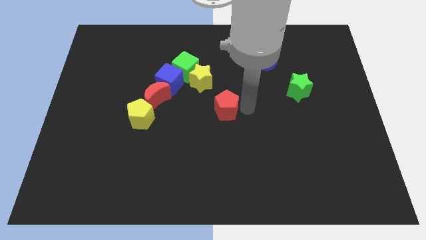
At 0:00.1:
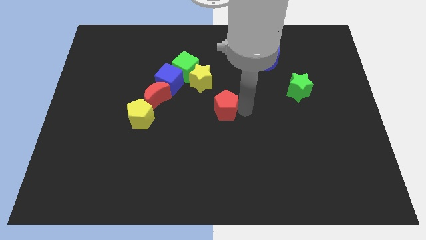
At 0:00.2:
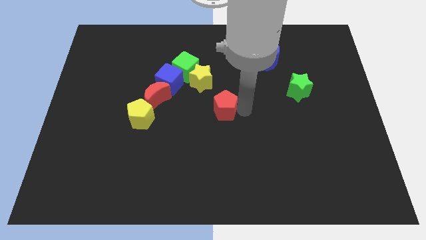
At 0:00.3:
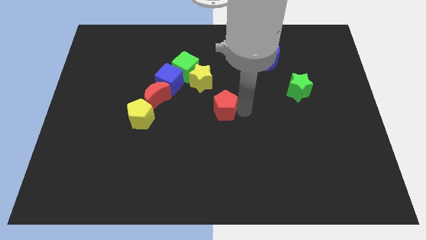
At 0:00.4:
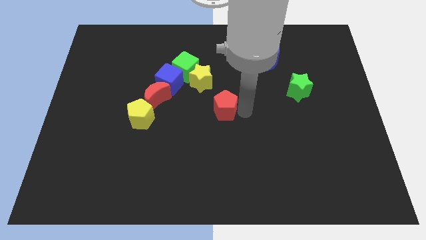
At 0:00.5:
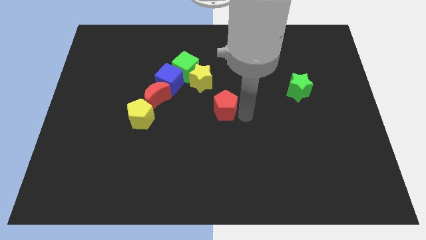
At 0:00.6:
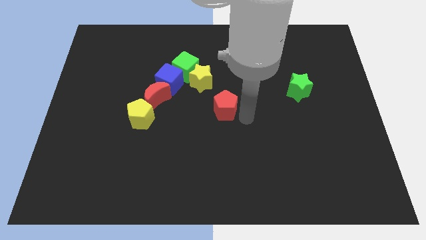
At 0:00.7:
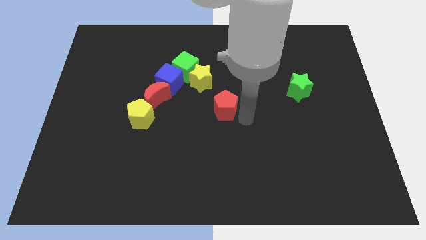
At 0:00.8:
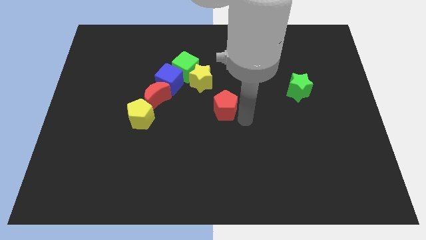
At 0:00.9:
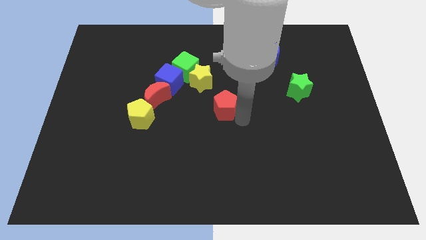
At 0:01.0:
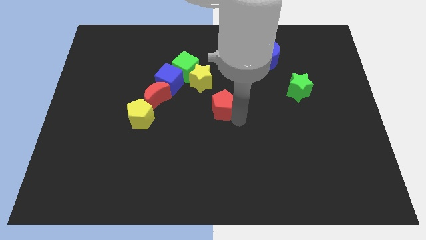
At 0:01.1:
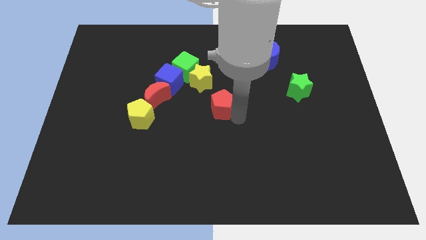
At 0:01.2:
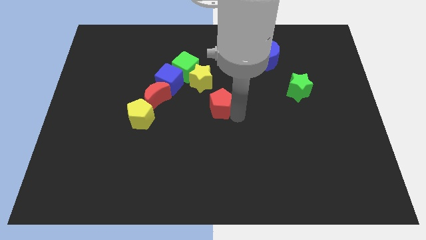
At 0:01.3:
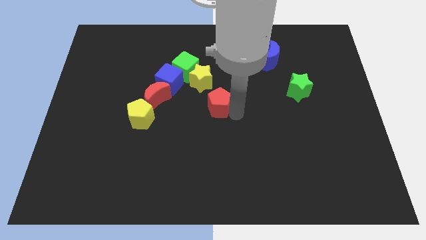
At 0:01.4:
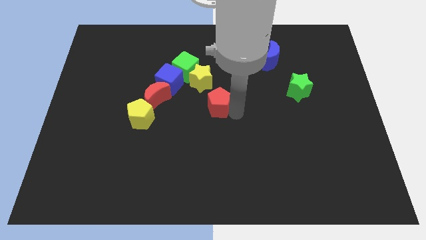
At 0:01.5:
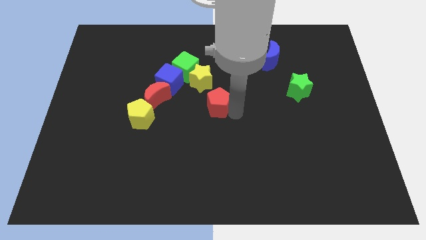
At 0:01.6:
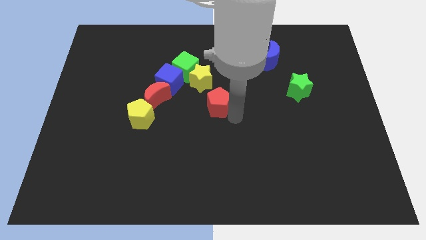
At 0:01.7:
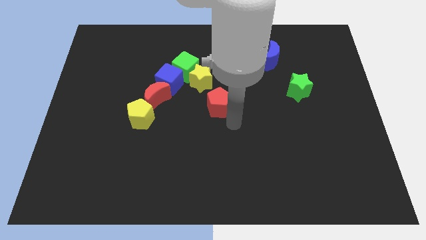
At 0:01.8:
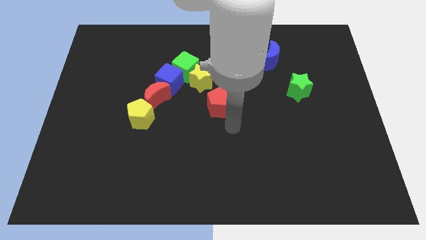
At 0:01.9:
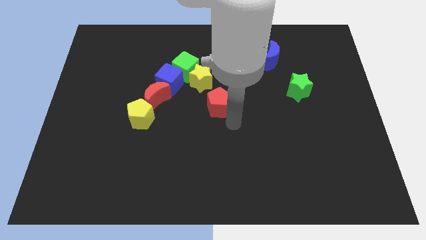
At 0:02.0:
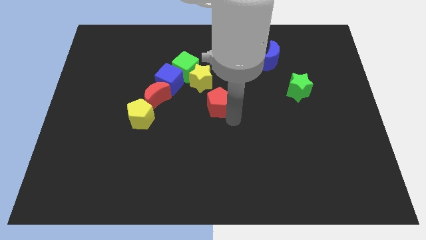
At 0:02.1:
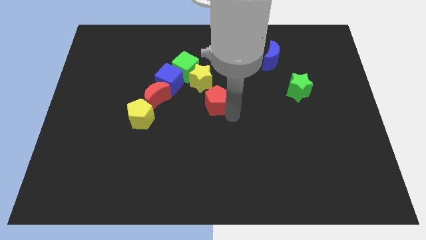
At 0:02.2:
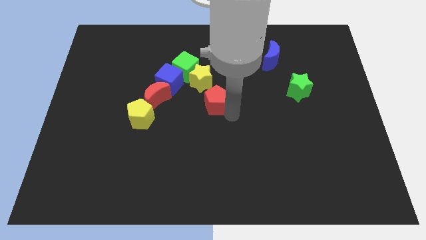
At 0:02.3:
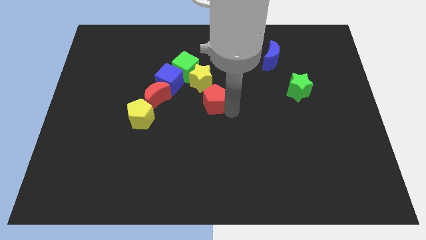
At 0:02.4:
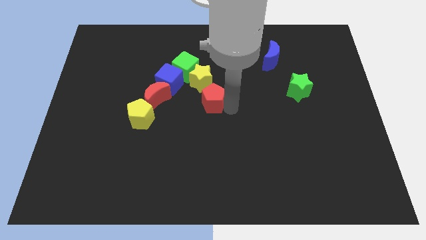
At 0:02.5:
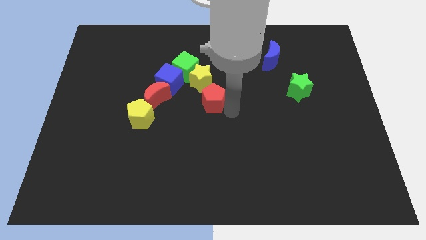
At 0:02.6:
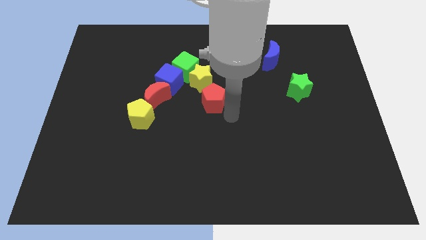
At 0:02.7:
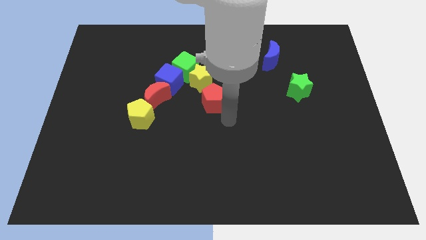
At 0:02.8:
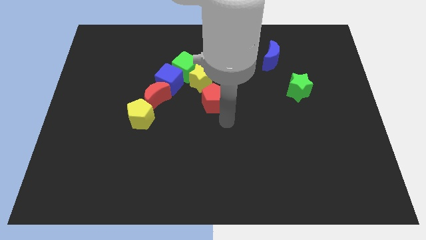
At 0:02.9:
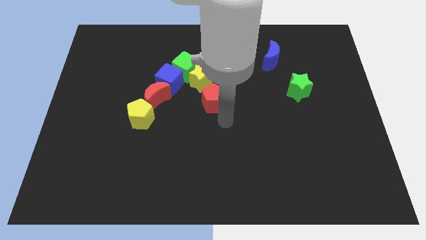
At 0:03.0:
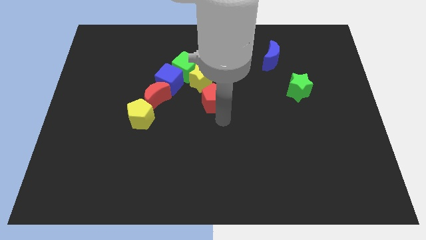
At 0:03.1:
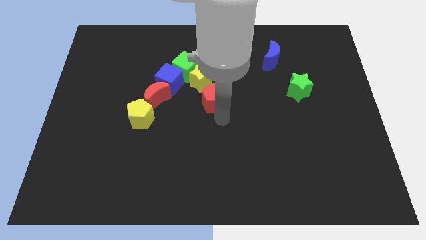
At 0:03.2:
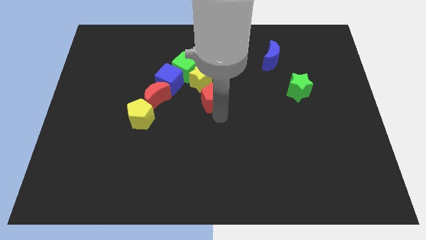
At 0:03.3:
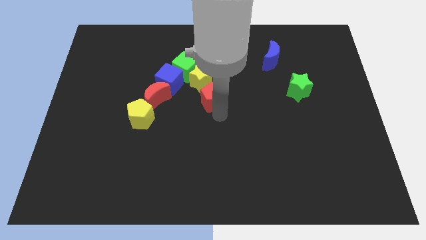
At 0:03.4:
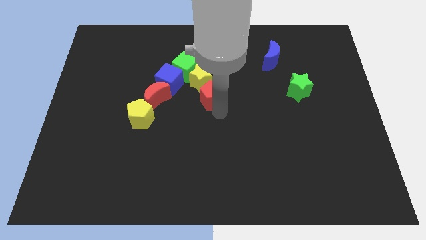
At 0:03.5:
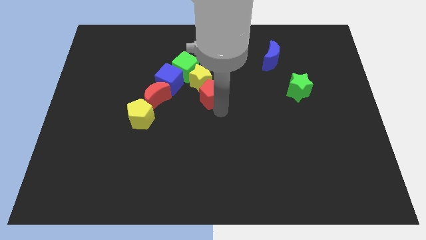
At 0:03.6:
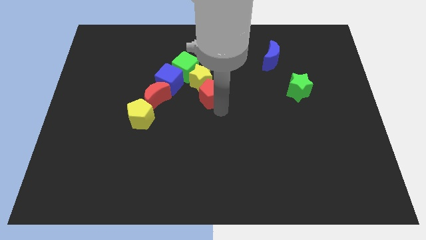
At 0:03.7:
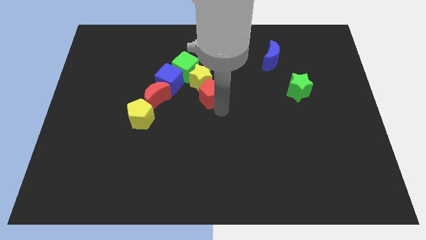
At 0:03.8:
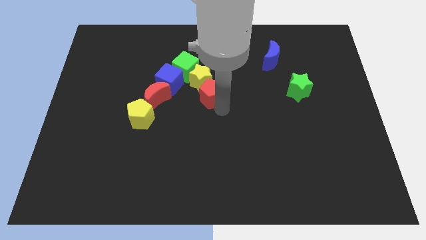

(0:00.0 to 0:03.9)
move the red pentagon into the yellow star

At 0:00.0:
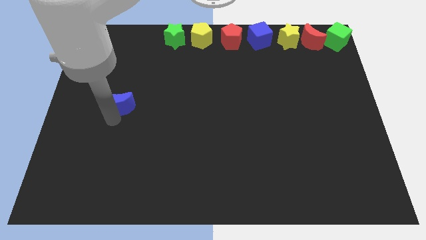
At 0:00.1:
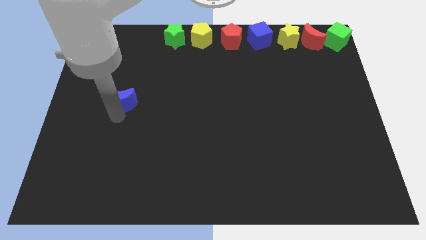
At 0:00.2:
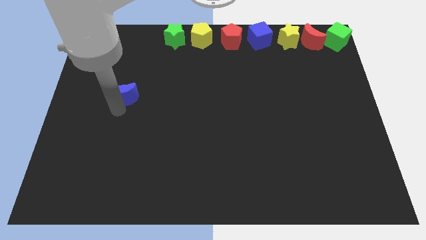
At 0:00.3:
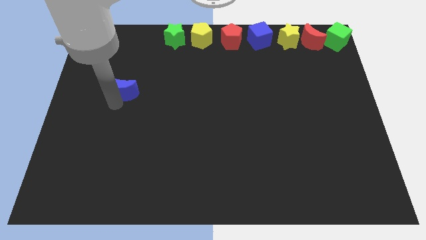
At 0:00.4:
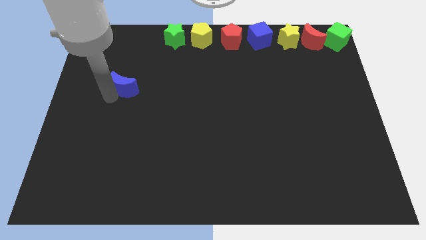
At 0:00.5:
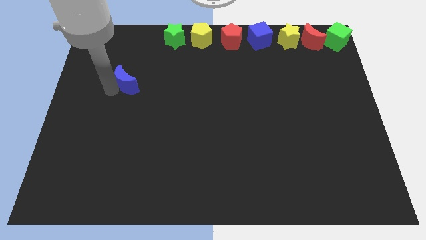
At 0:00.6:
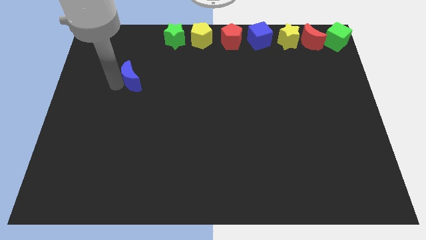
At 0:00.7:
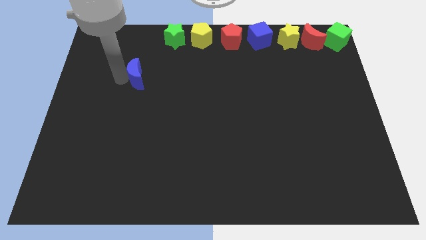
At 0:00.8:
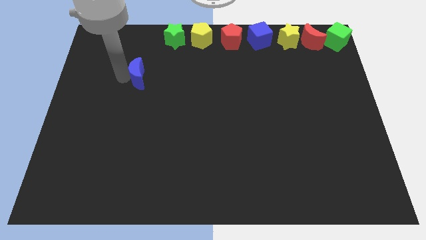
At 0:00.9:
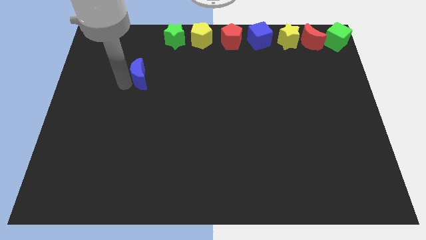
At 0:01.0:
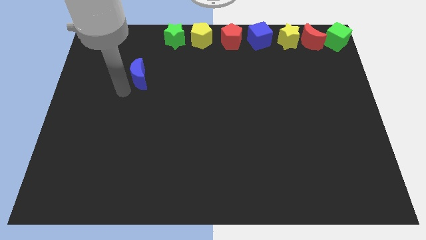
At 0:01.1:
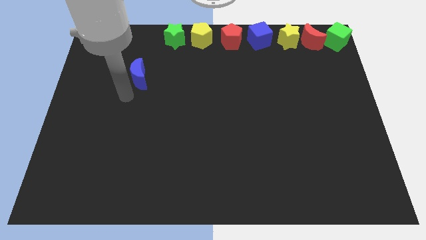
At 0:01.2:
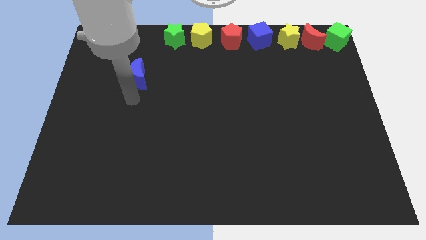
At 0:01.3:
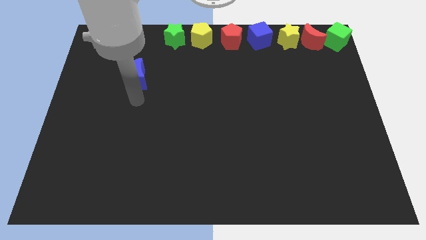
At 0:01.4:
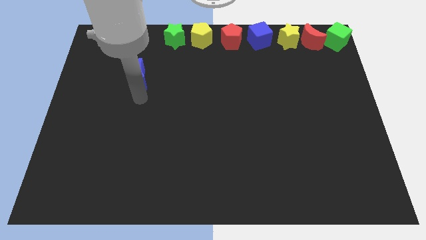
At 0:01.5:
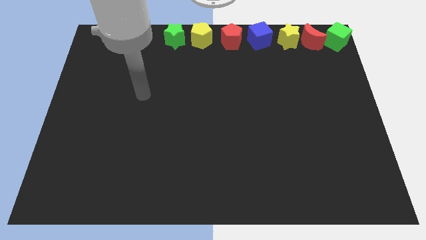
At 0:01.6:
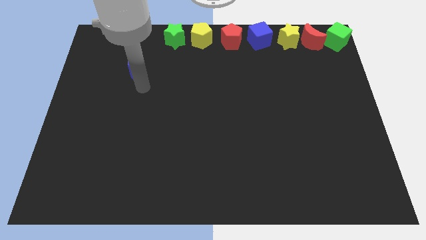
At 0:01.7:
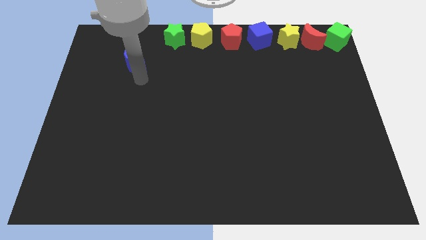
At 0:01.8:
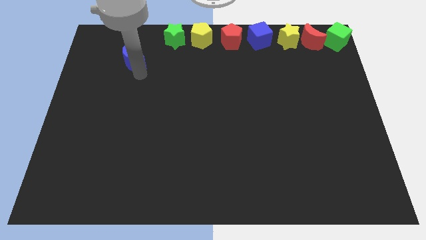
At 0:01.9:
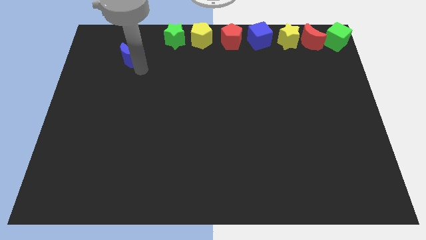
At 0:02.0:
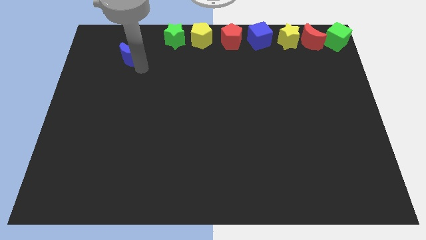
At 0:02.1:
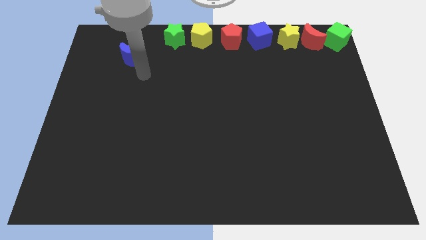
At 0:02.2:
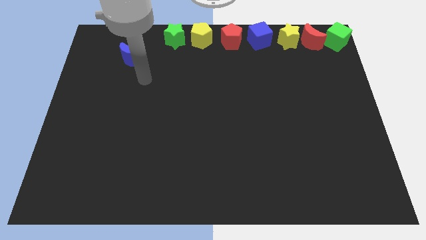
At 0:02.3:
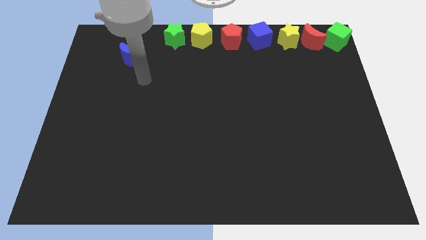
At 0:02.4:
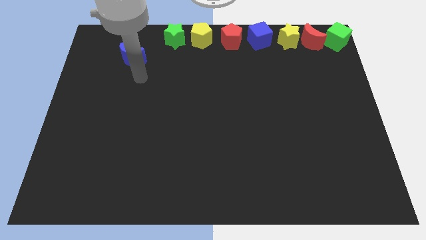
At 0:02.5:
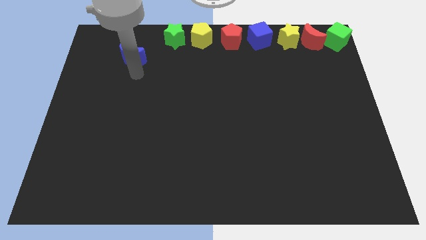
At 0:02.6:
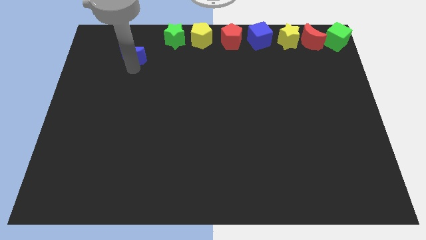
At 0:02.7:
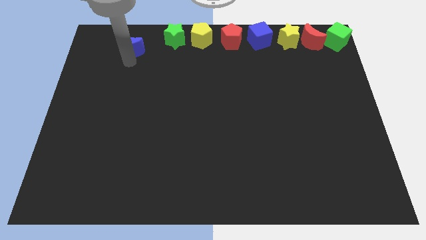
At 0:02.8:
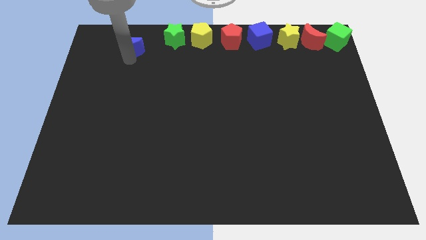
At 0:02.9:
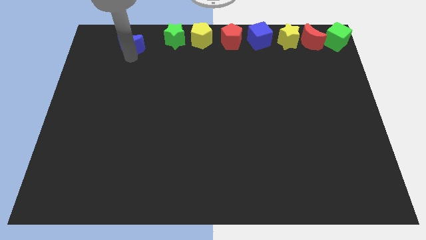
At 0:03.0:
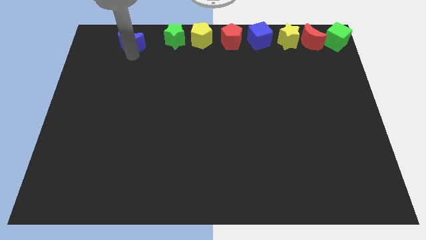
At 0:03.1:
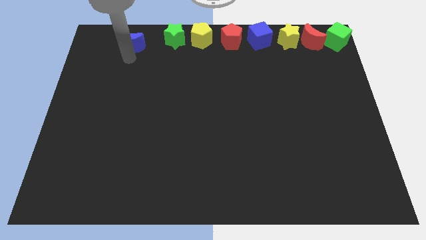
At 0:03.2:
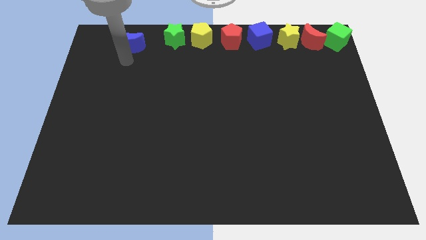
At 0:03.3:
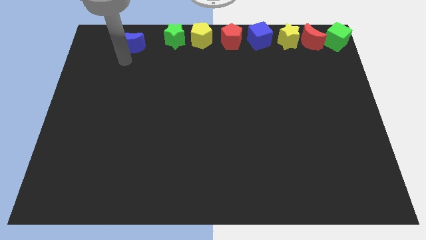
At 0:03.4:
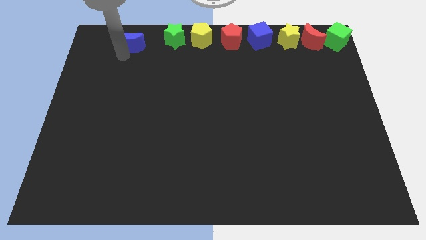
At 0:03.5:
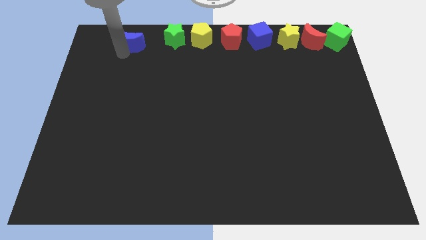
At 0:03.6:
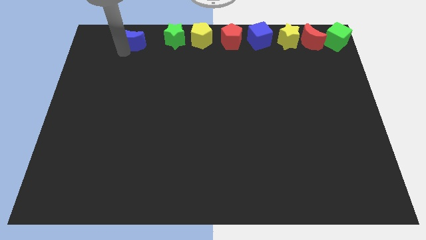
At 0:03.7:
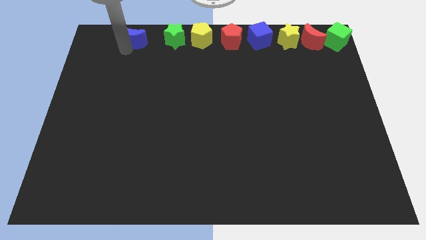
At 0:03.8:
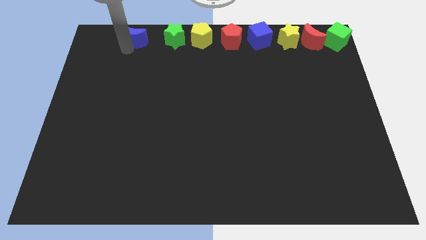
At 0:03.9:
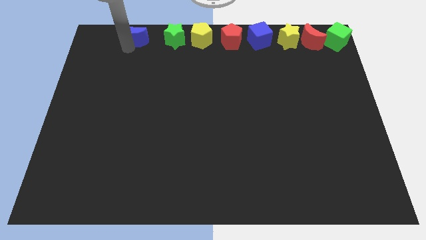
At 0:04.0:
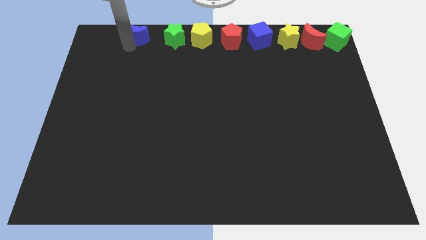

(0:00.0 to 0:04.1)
place the blue moon at the top of the board to form a horizontal line

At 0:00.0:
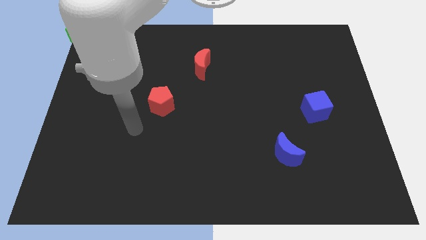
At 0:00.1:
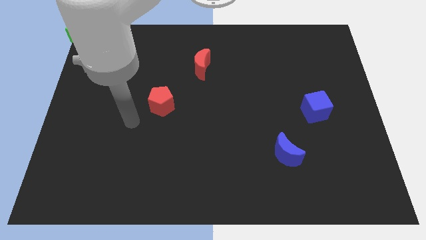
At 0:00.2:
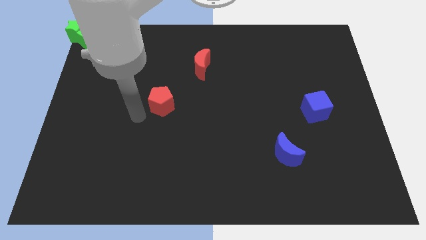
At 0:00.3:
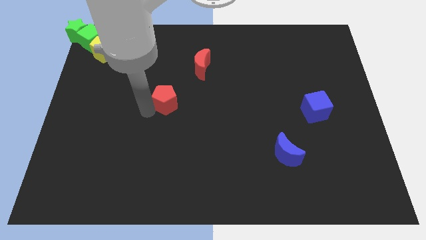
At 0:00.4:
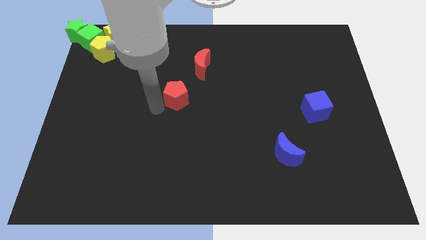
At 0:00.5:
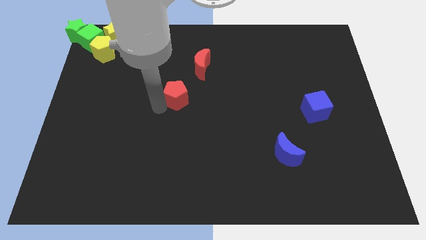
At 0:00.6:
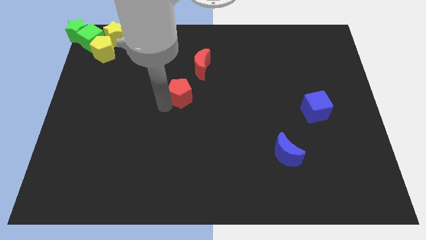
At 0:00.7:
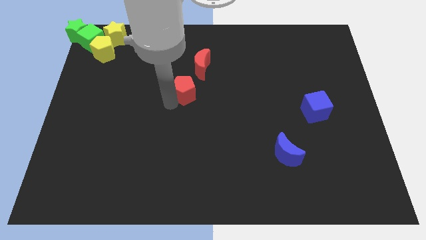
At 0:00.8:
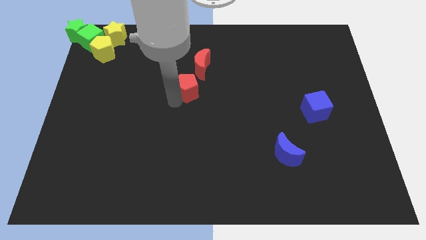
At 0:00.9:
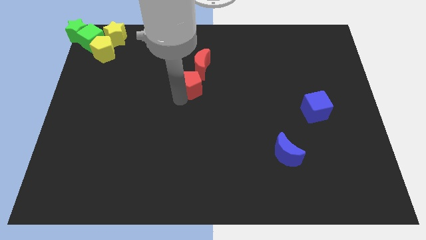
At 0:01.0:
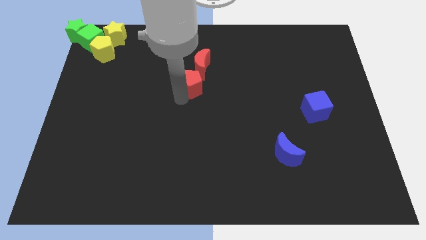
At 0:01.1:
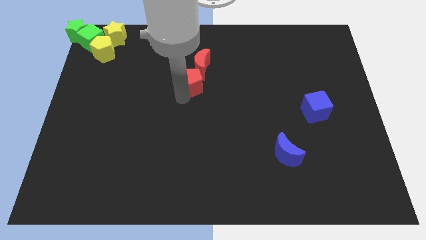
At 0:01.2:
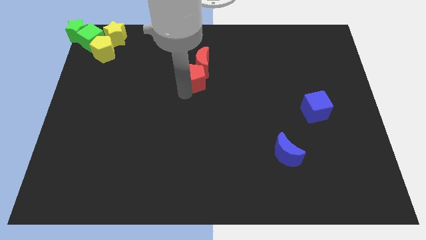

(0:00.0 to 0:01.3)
group up the red blocks together at the center of the board
